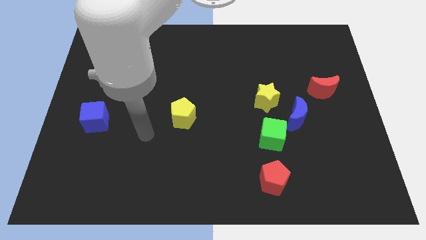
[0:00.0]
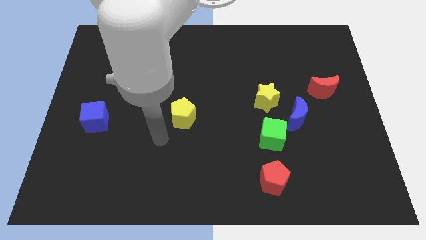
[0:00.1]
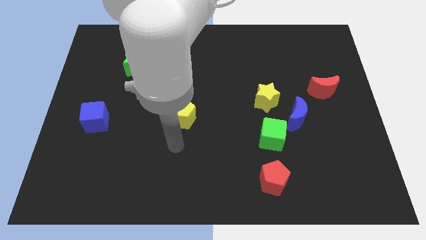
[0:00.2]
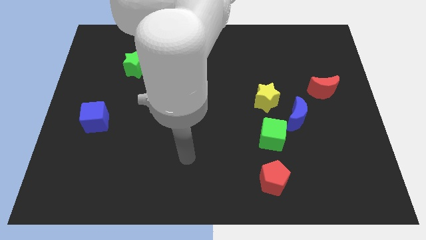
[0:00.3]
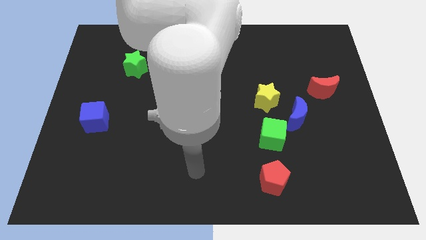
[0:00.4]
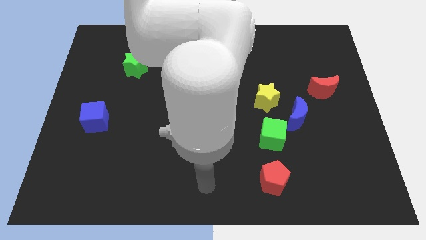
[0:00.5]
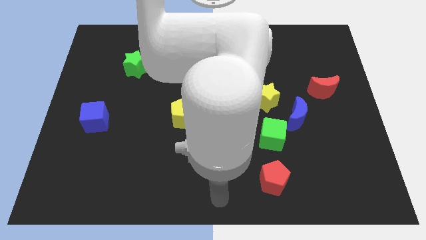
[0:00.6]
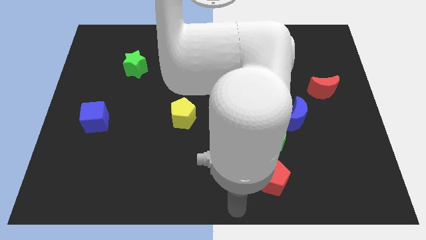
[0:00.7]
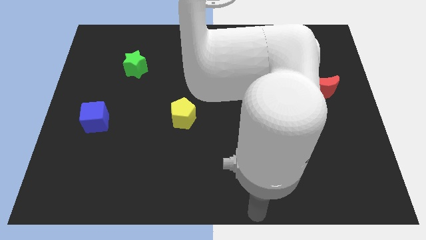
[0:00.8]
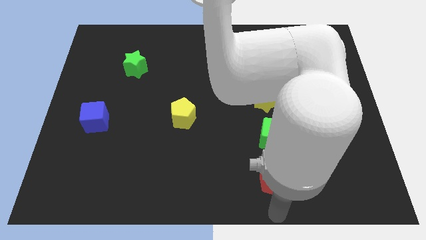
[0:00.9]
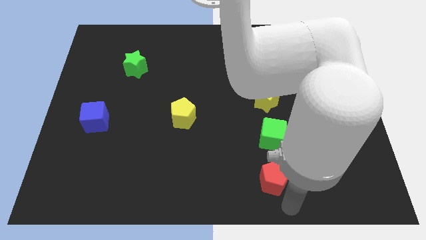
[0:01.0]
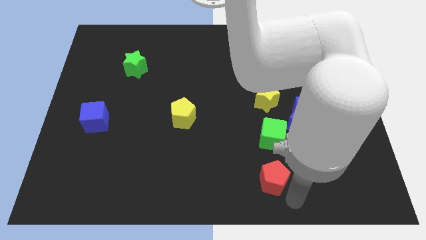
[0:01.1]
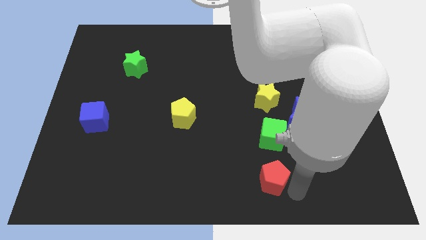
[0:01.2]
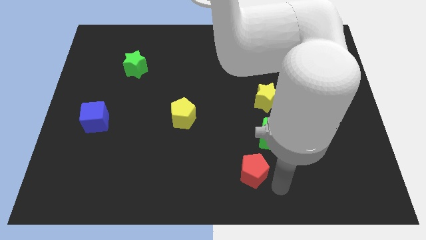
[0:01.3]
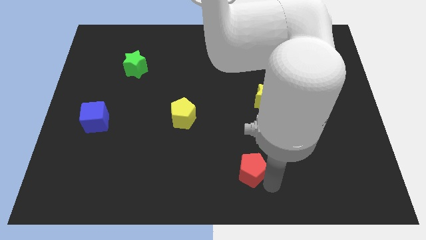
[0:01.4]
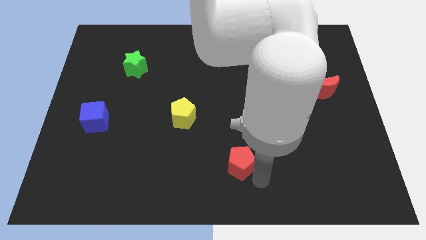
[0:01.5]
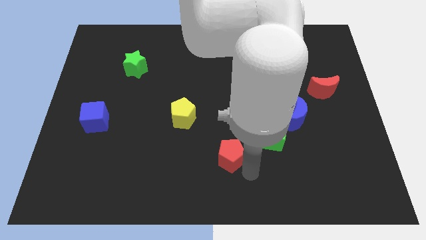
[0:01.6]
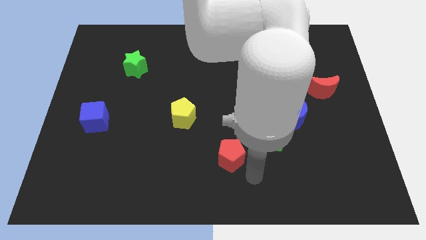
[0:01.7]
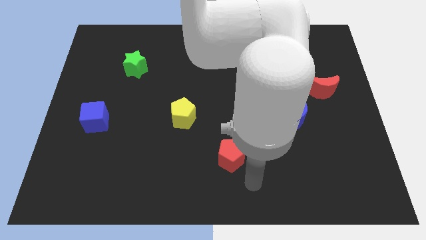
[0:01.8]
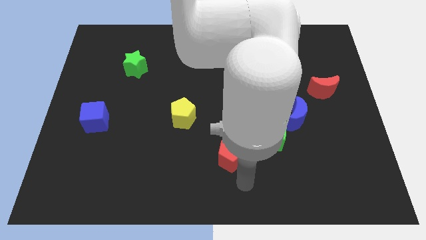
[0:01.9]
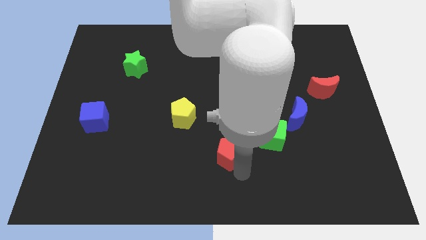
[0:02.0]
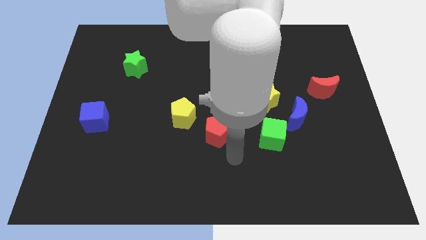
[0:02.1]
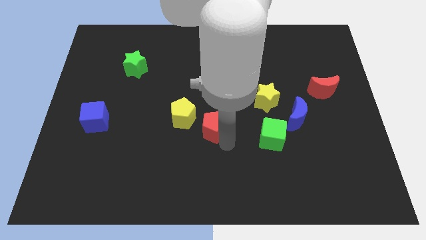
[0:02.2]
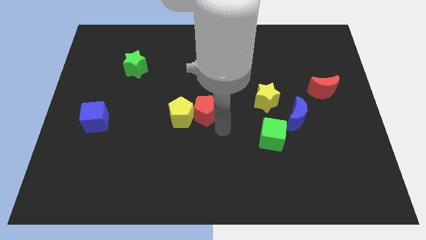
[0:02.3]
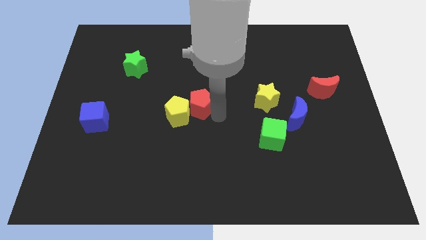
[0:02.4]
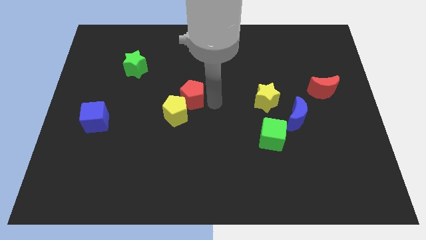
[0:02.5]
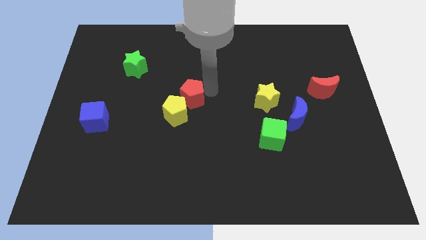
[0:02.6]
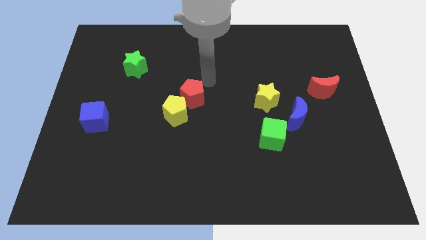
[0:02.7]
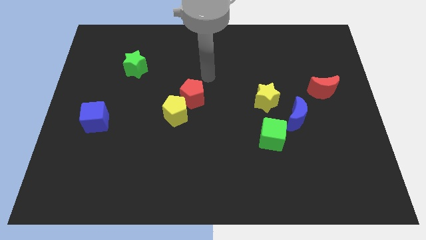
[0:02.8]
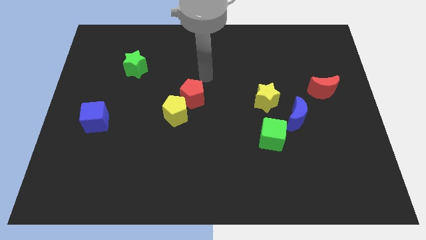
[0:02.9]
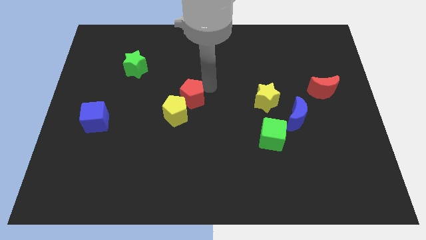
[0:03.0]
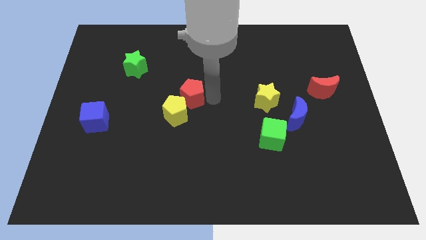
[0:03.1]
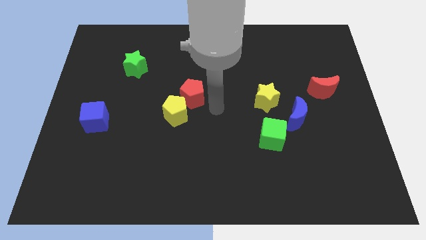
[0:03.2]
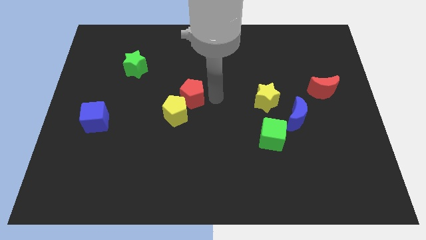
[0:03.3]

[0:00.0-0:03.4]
place the red pentagon at the top right side of yellow pentagon

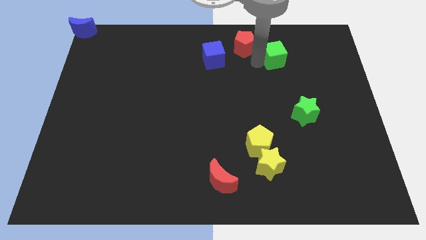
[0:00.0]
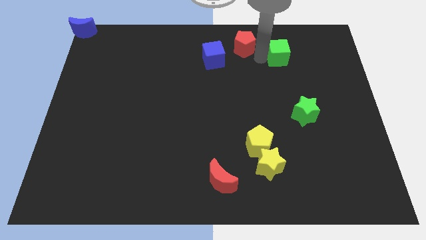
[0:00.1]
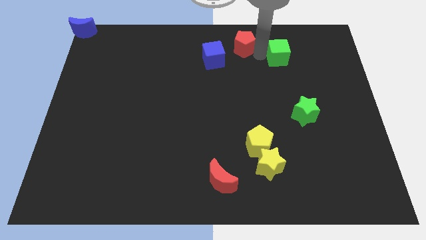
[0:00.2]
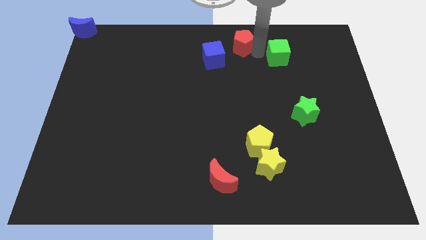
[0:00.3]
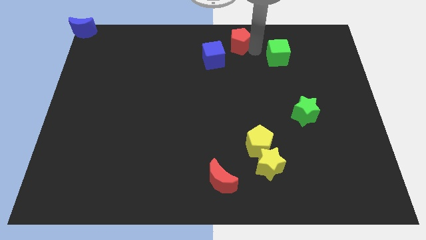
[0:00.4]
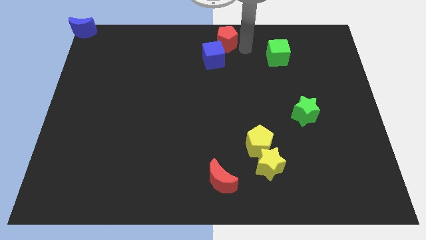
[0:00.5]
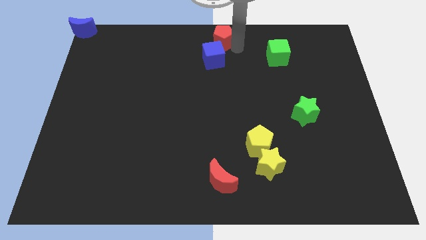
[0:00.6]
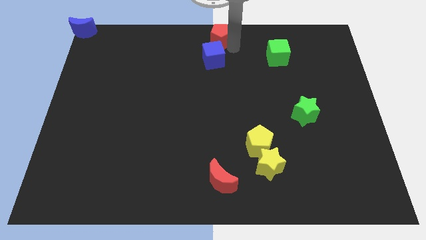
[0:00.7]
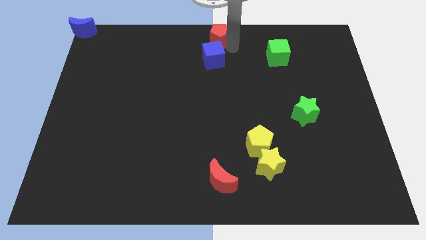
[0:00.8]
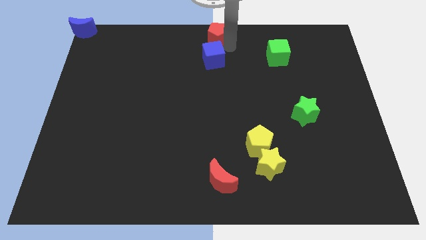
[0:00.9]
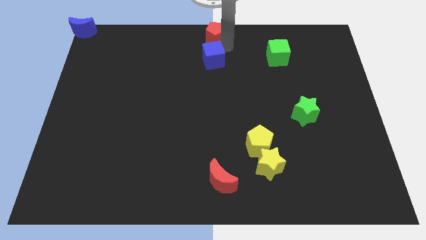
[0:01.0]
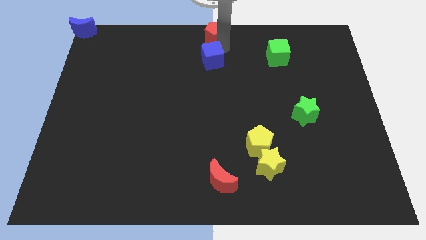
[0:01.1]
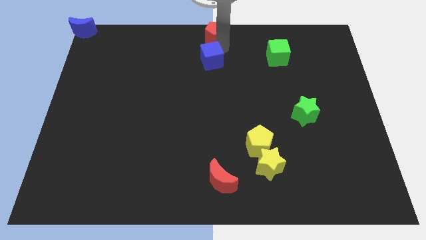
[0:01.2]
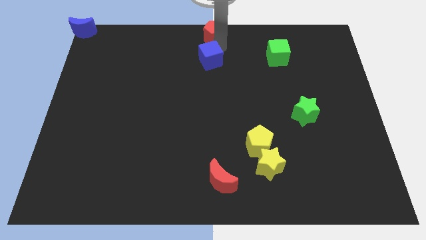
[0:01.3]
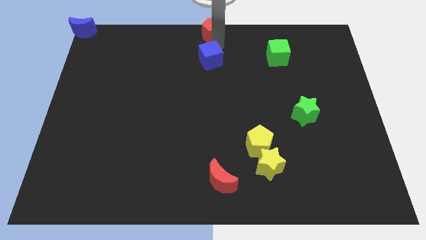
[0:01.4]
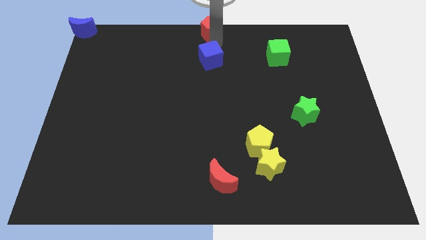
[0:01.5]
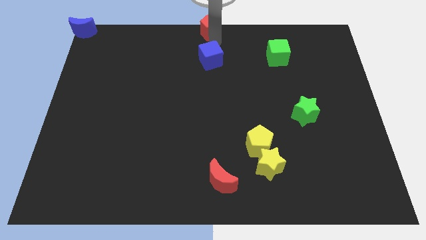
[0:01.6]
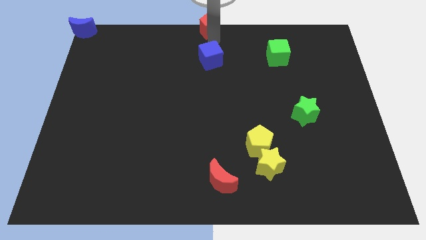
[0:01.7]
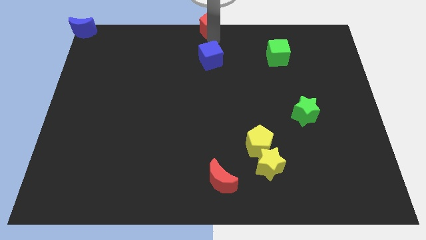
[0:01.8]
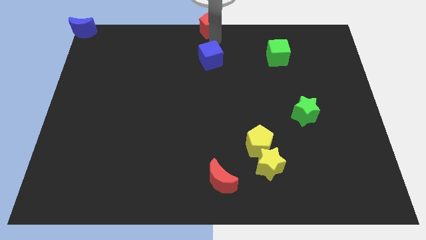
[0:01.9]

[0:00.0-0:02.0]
move the red pentagon to th top center of the board

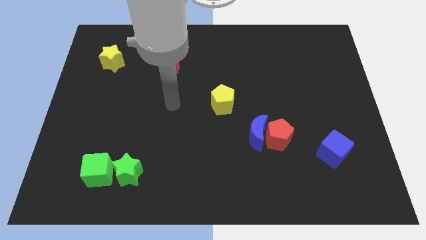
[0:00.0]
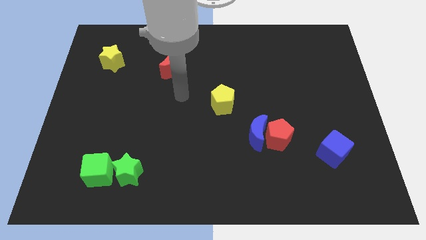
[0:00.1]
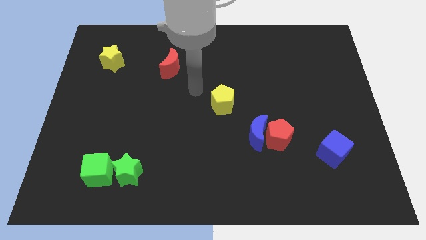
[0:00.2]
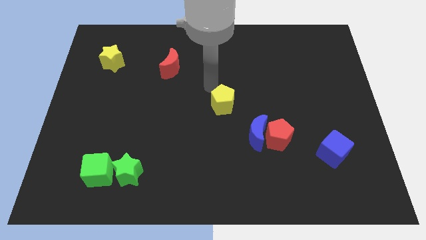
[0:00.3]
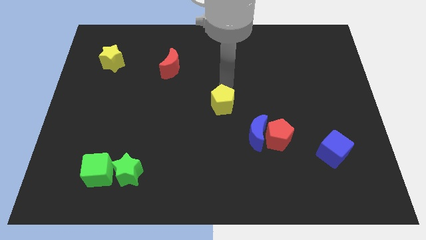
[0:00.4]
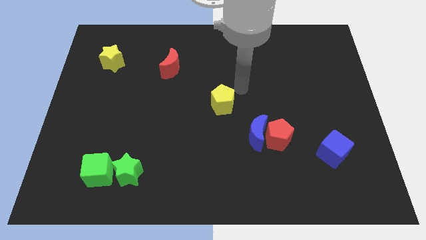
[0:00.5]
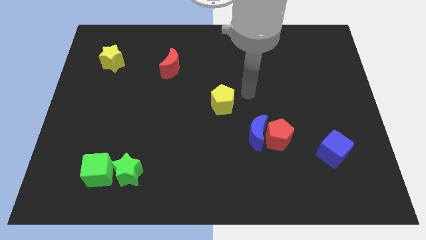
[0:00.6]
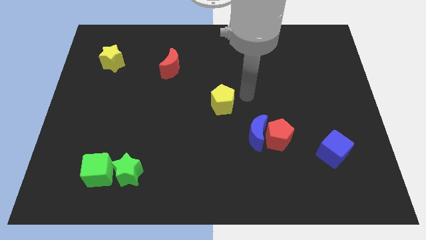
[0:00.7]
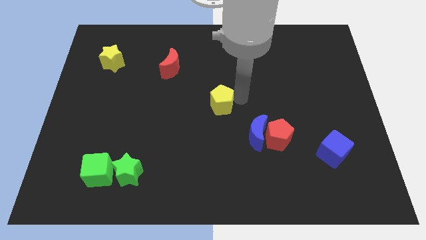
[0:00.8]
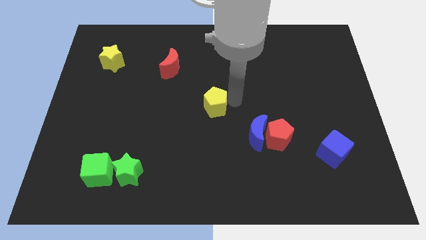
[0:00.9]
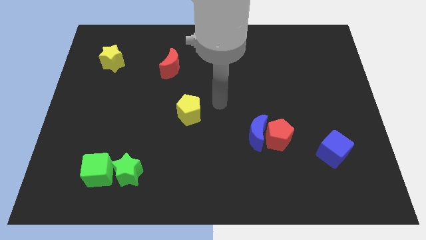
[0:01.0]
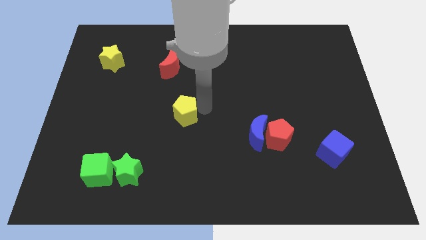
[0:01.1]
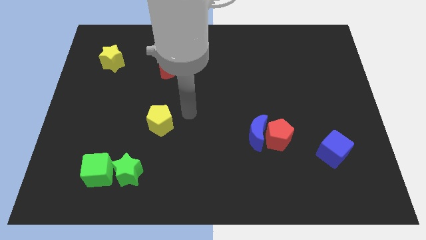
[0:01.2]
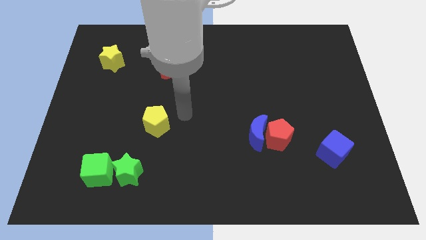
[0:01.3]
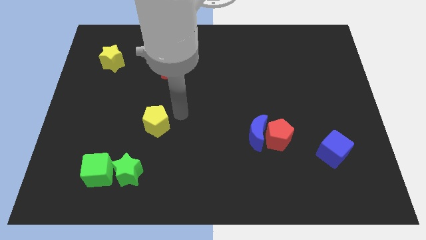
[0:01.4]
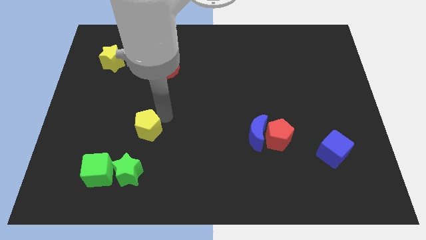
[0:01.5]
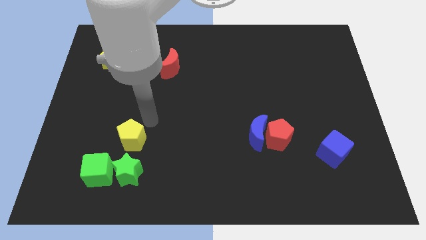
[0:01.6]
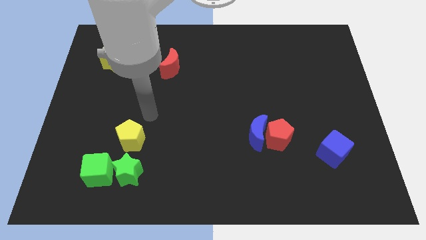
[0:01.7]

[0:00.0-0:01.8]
push the yellow pentagon towards the left side of the board

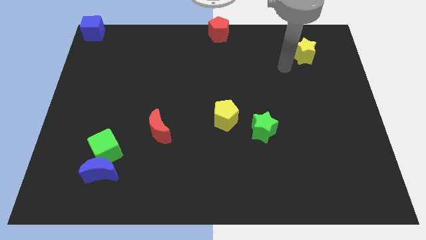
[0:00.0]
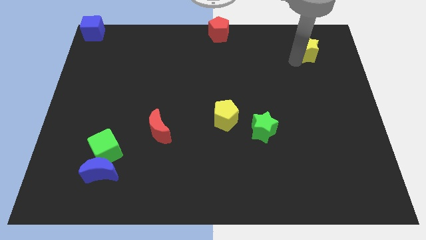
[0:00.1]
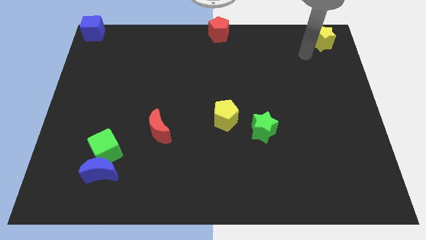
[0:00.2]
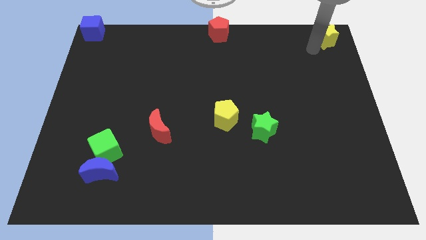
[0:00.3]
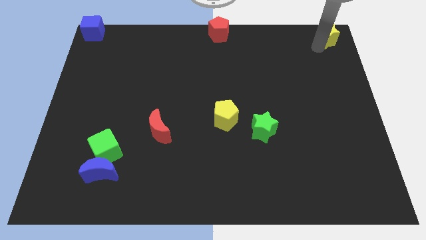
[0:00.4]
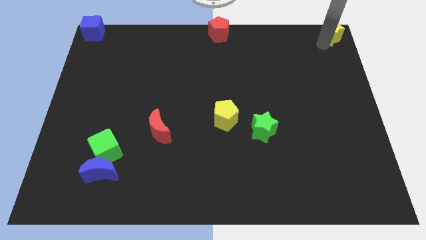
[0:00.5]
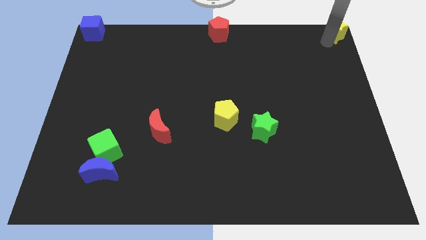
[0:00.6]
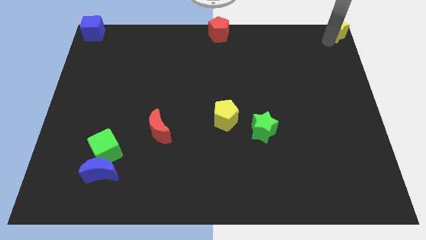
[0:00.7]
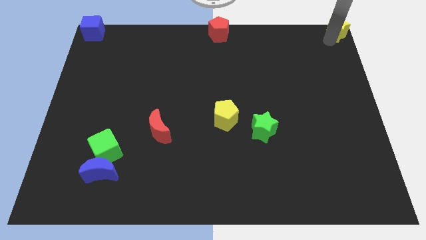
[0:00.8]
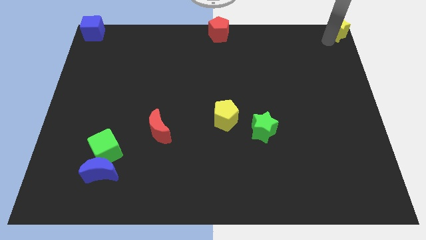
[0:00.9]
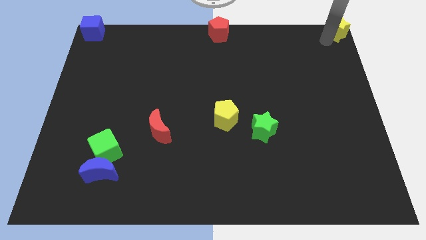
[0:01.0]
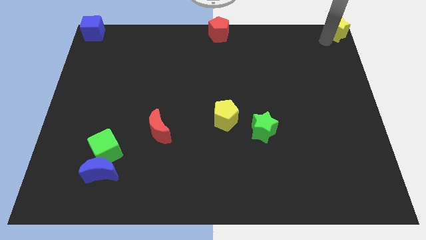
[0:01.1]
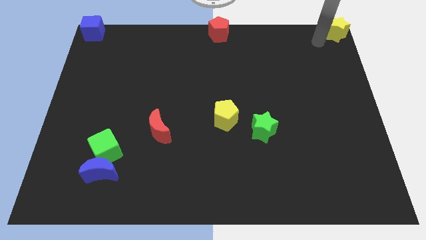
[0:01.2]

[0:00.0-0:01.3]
place the yellow star at the top right corner of the board

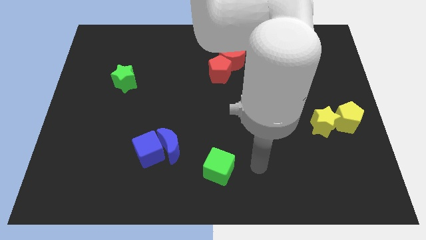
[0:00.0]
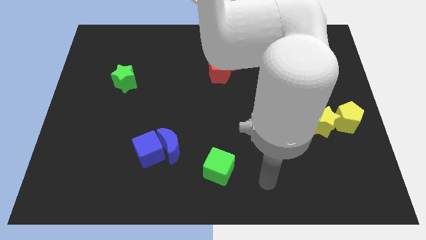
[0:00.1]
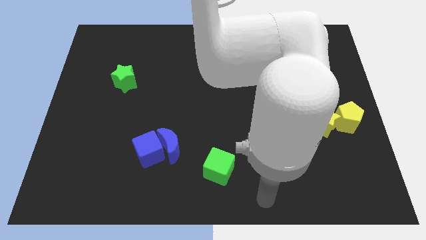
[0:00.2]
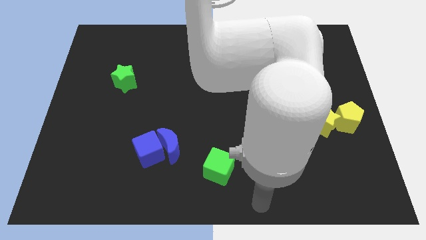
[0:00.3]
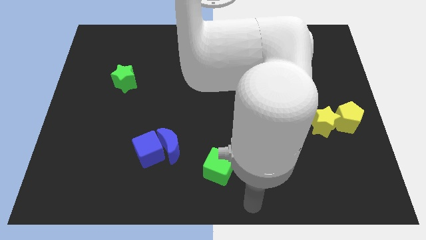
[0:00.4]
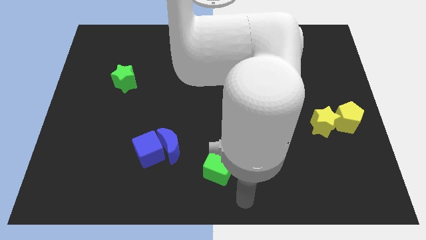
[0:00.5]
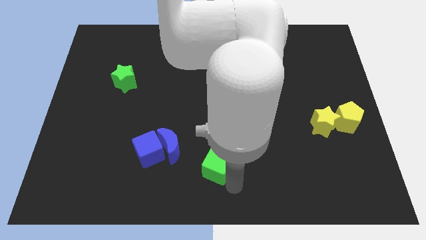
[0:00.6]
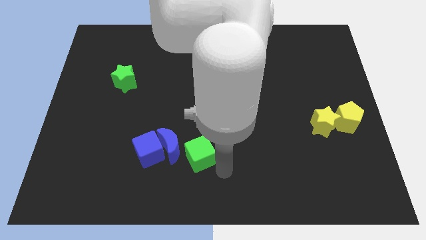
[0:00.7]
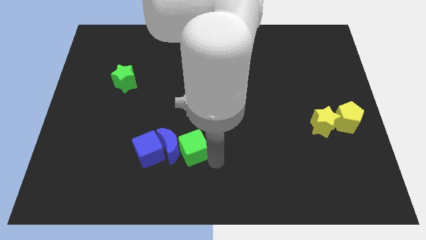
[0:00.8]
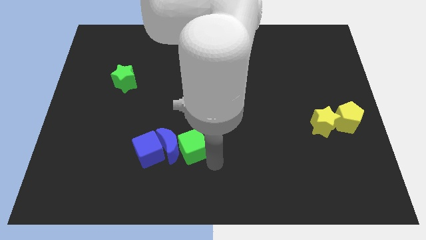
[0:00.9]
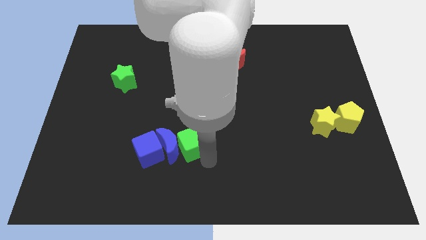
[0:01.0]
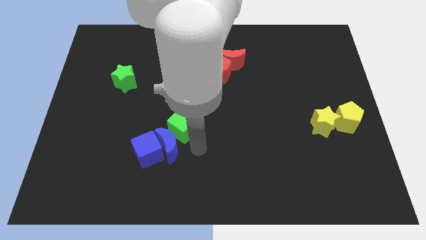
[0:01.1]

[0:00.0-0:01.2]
slide green cube into blue moon
